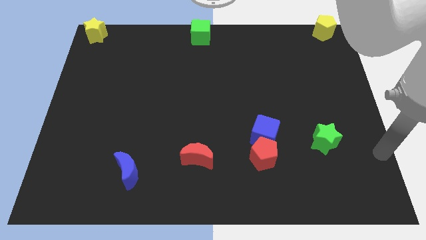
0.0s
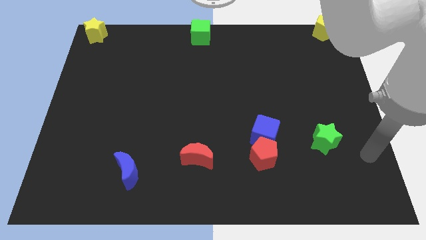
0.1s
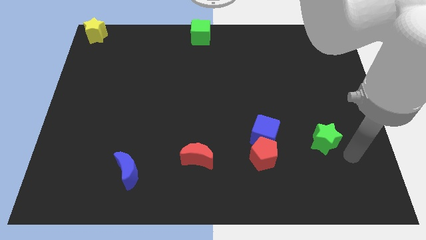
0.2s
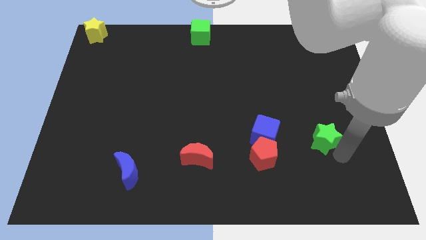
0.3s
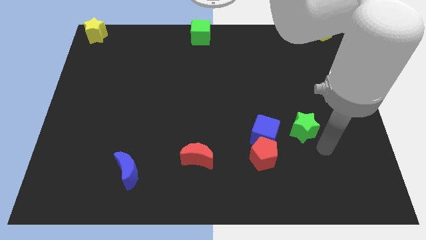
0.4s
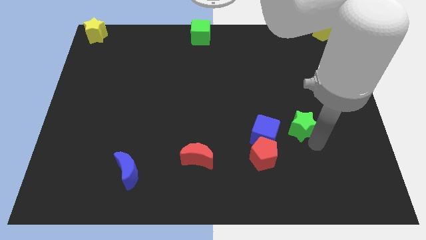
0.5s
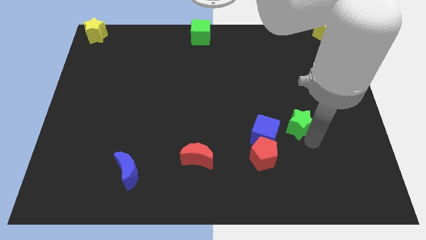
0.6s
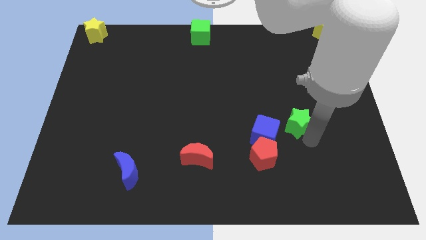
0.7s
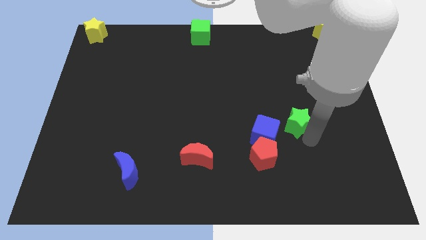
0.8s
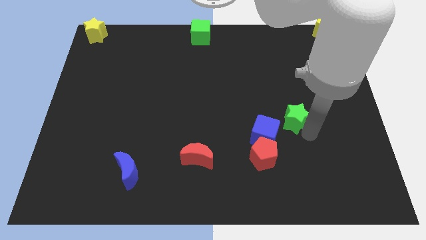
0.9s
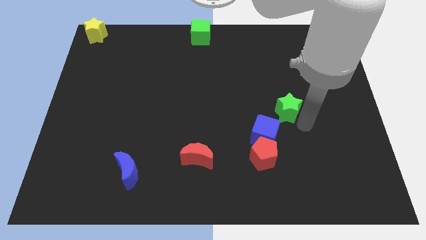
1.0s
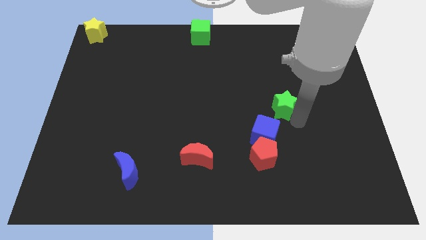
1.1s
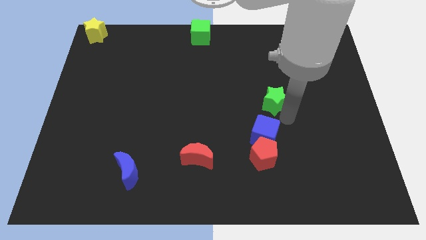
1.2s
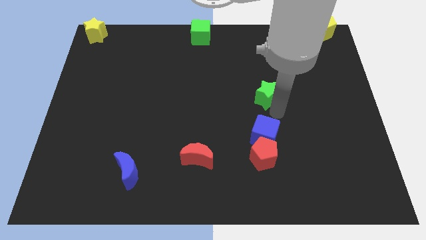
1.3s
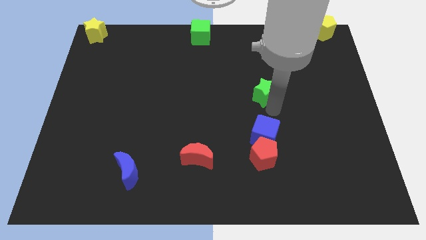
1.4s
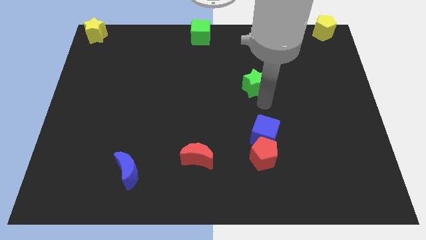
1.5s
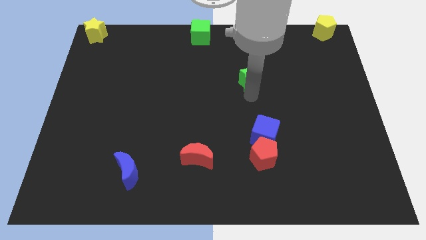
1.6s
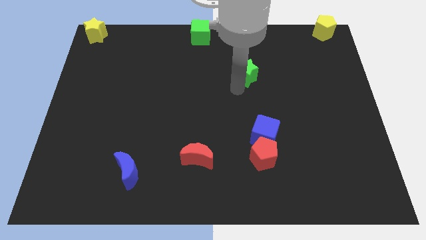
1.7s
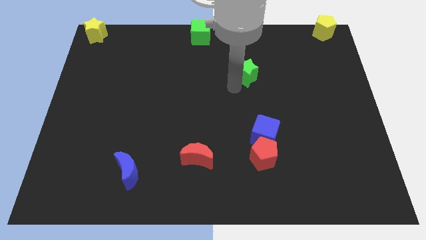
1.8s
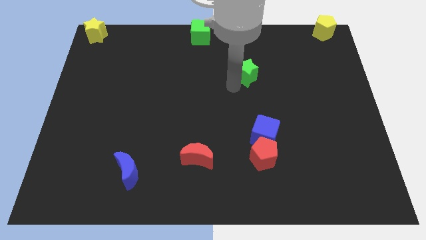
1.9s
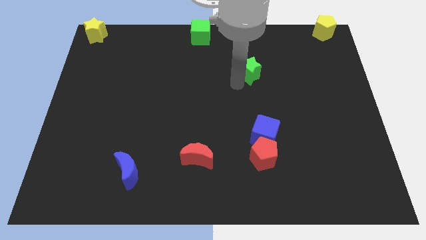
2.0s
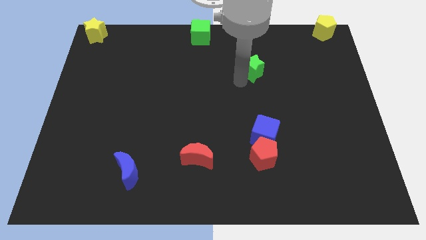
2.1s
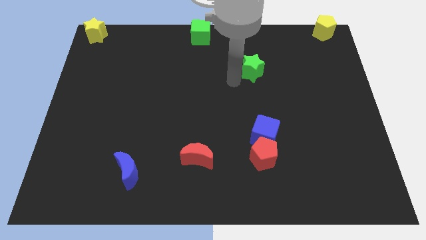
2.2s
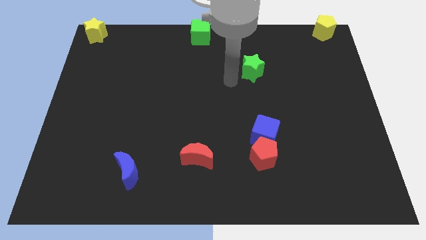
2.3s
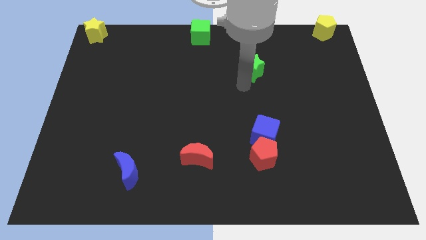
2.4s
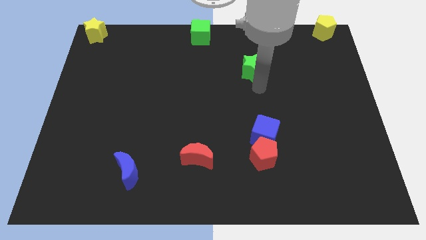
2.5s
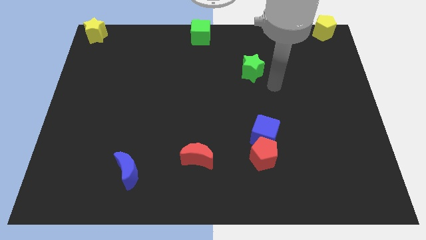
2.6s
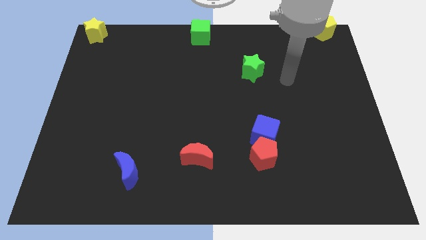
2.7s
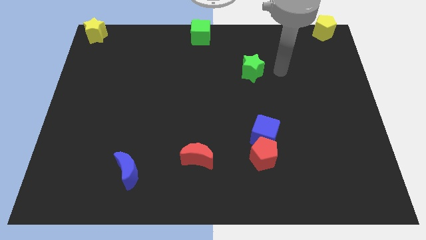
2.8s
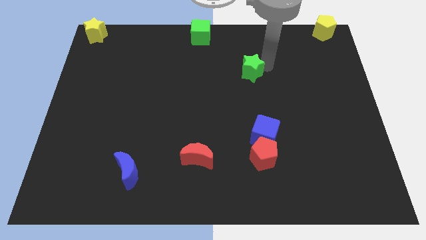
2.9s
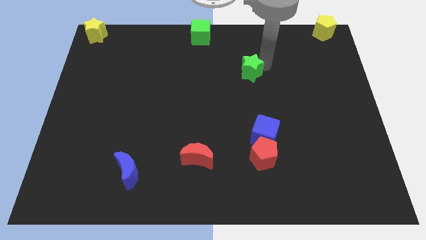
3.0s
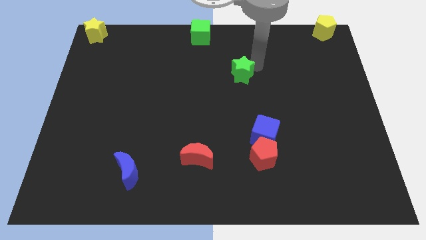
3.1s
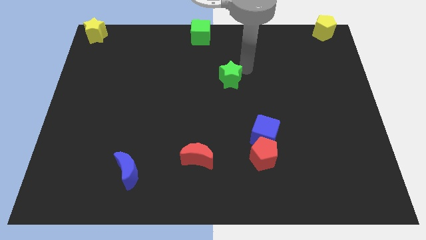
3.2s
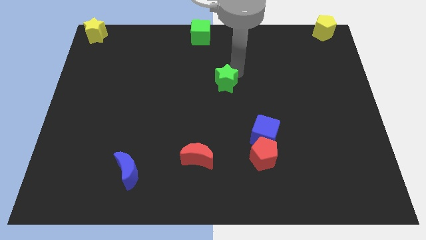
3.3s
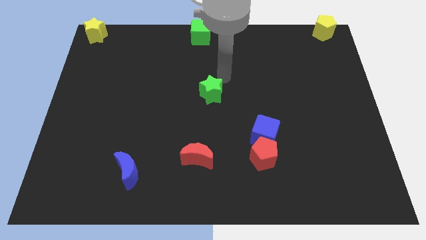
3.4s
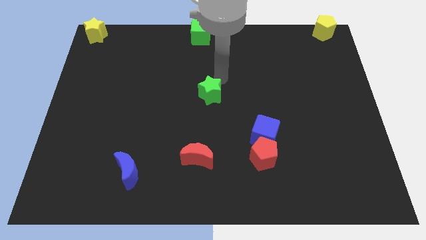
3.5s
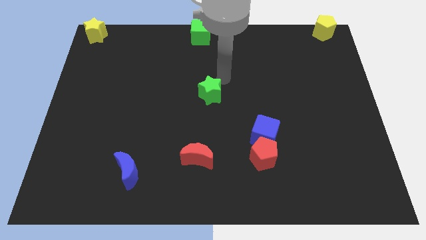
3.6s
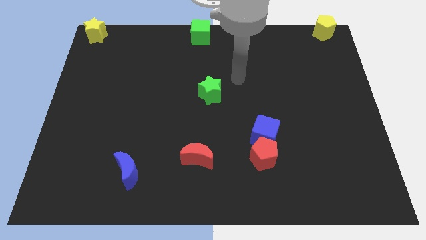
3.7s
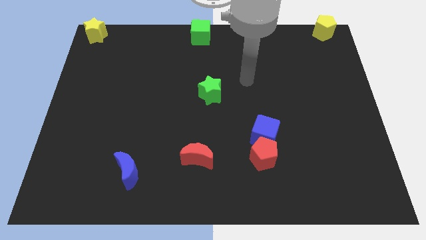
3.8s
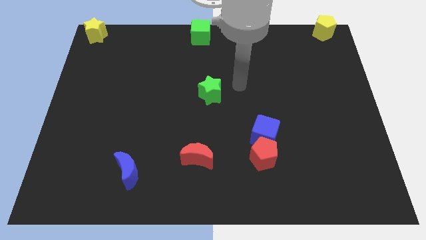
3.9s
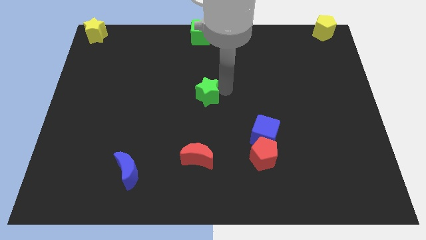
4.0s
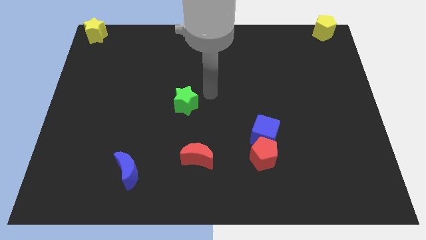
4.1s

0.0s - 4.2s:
move the green star above the red crescent

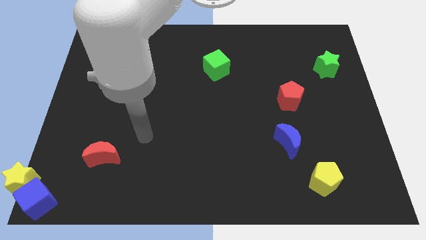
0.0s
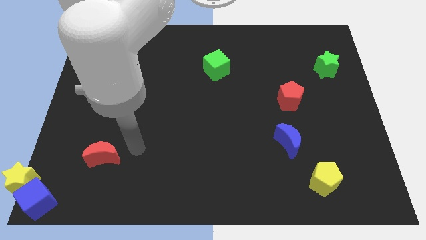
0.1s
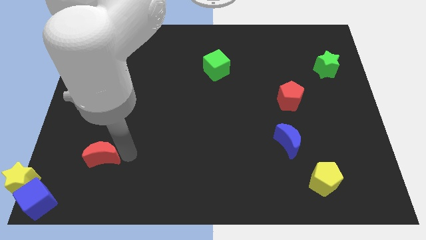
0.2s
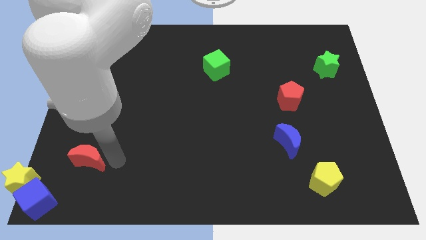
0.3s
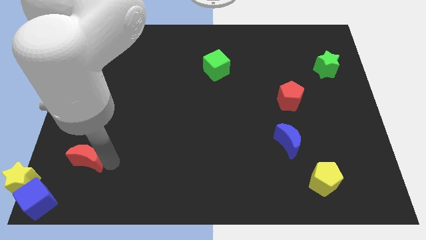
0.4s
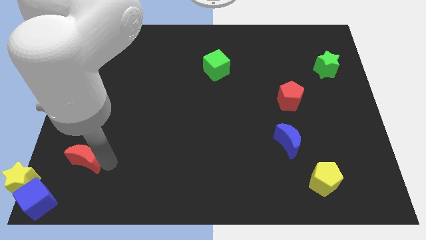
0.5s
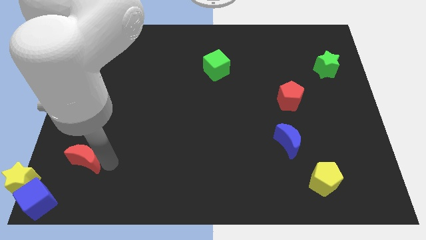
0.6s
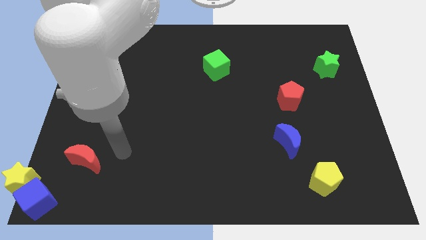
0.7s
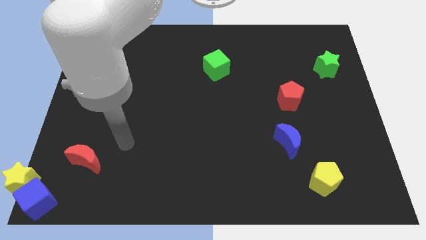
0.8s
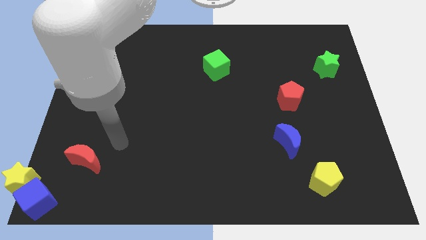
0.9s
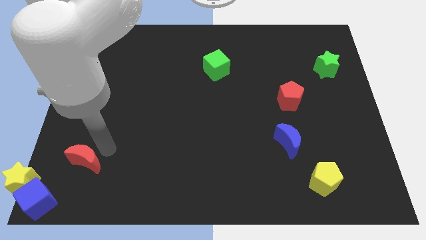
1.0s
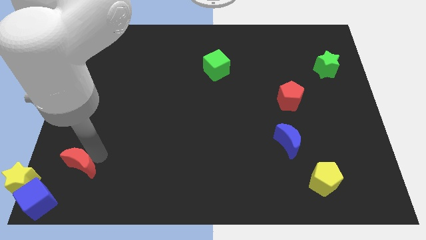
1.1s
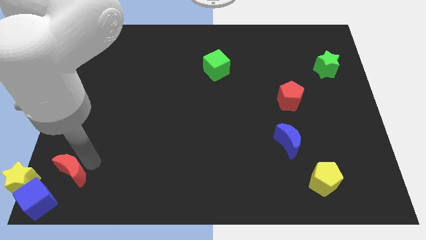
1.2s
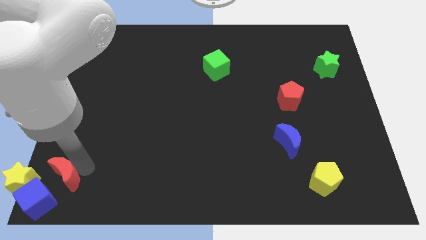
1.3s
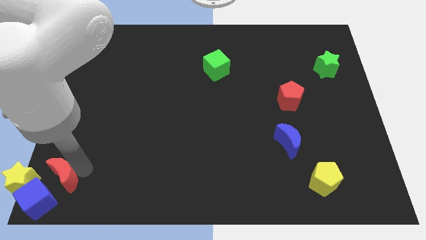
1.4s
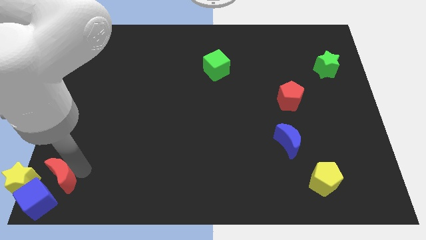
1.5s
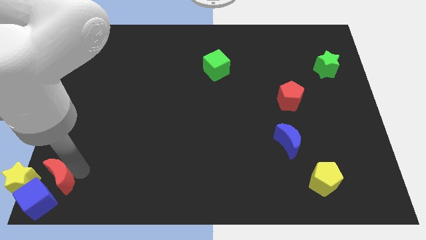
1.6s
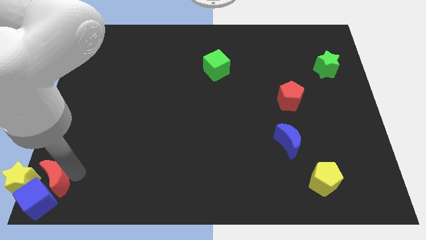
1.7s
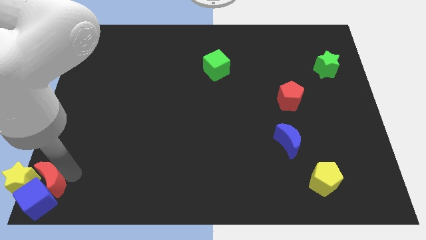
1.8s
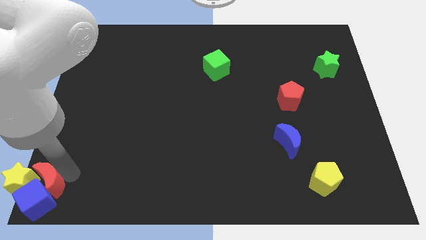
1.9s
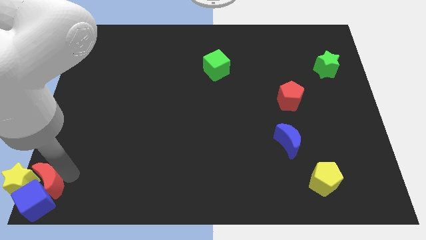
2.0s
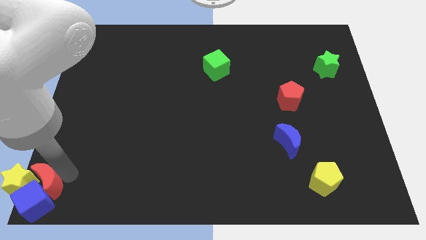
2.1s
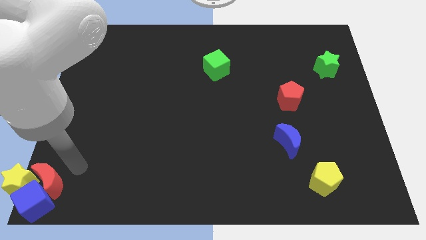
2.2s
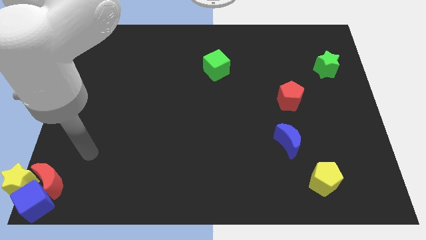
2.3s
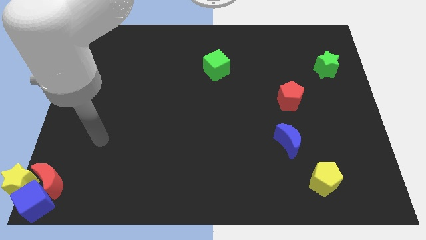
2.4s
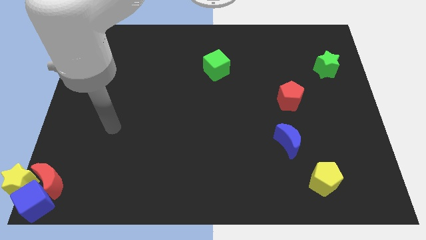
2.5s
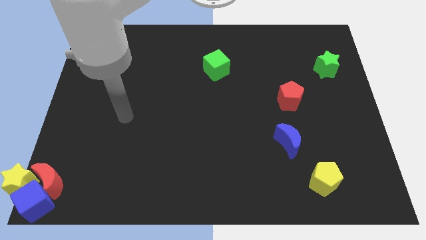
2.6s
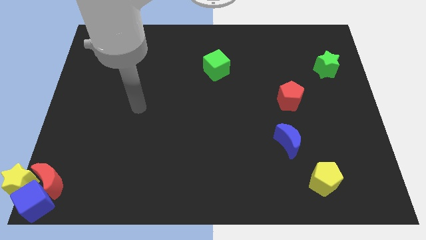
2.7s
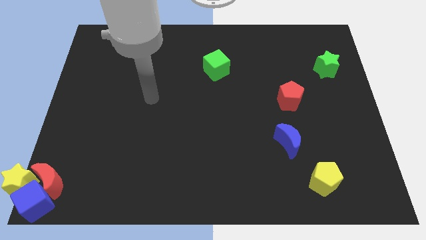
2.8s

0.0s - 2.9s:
place the red moon to the bottom left of the board

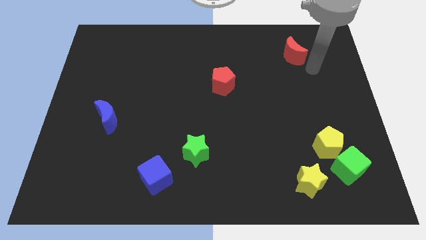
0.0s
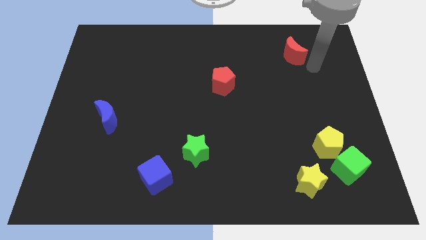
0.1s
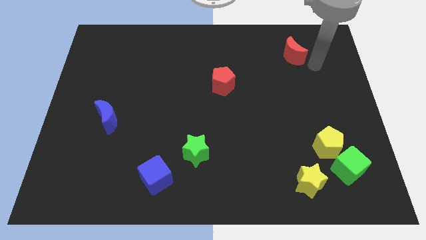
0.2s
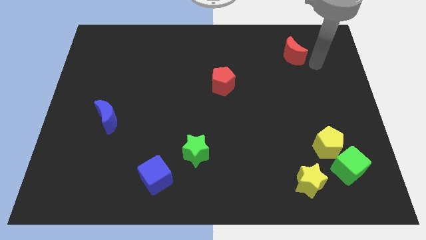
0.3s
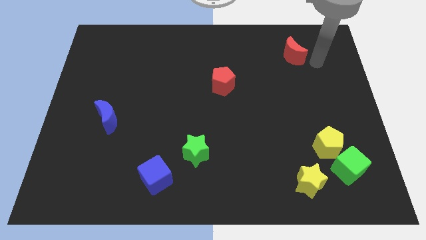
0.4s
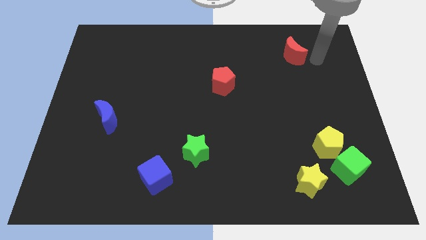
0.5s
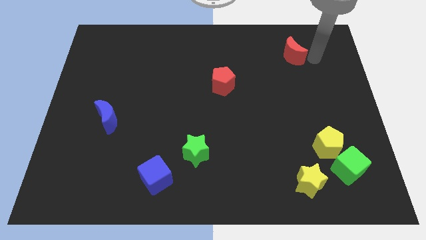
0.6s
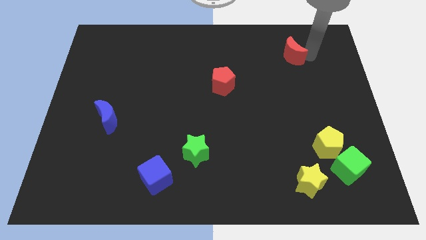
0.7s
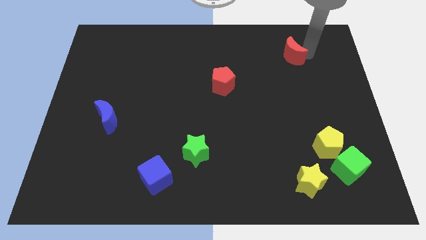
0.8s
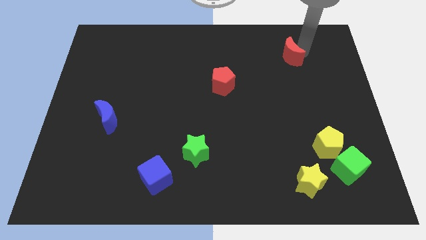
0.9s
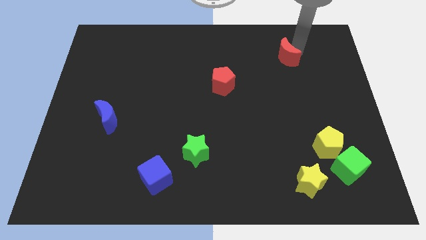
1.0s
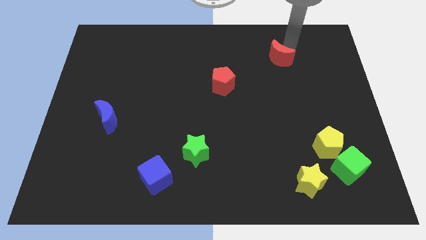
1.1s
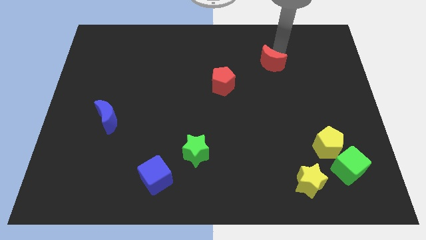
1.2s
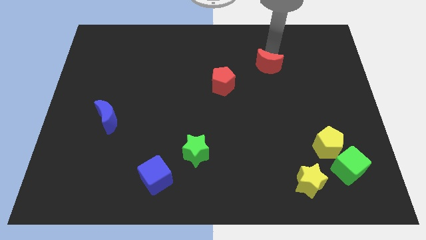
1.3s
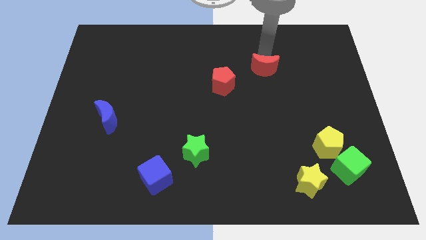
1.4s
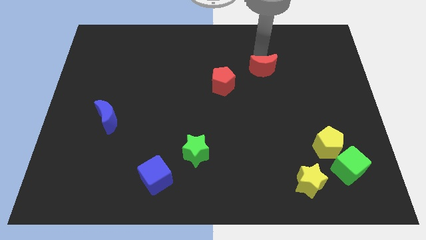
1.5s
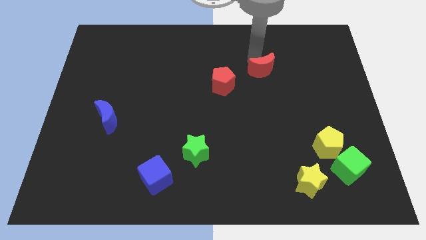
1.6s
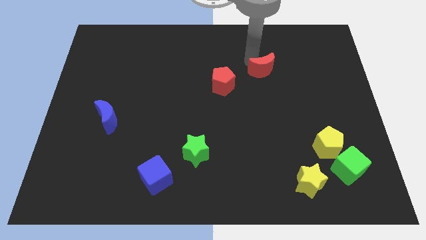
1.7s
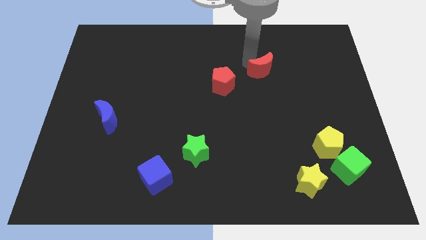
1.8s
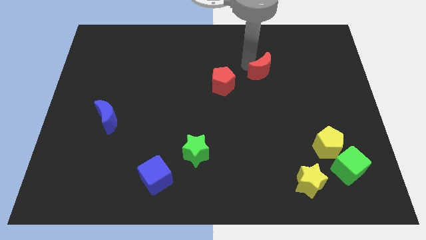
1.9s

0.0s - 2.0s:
push the red moon closer to the red pentagon
